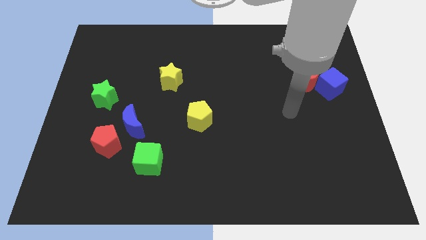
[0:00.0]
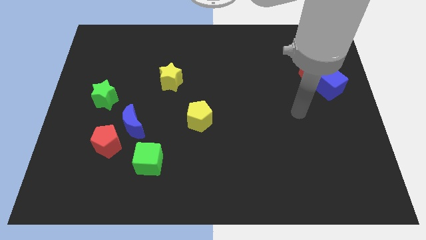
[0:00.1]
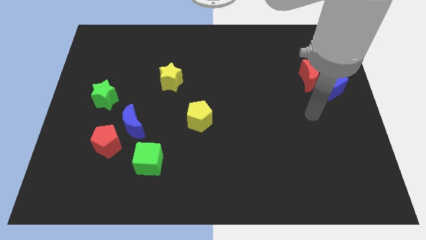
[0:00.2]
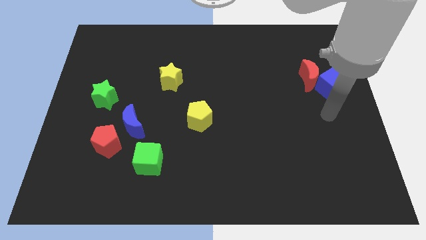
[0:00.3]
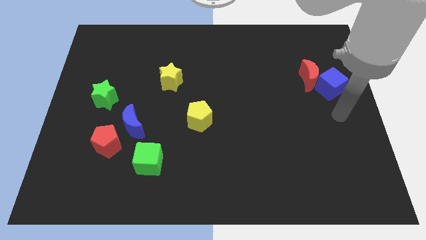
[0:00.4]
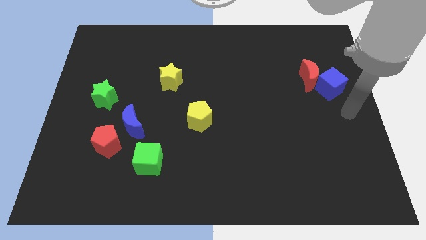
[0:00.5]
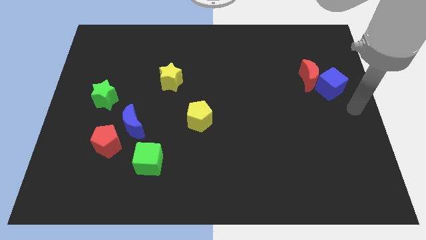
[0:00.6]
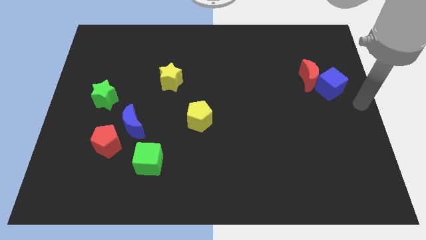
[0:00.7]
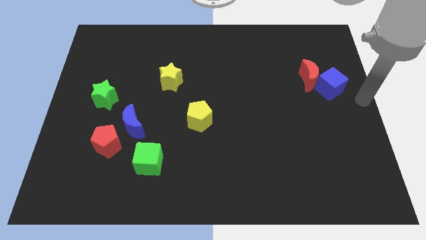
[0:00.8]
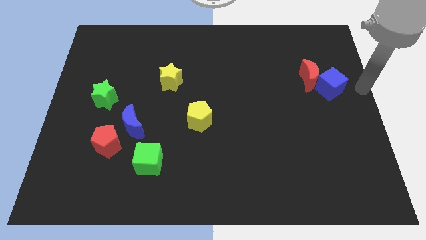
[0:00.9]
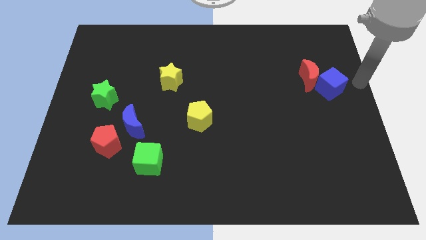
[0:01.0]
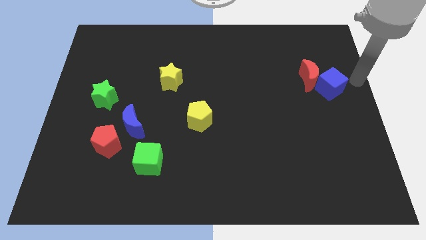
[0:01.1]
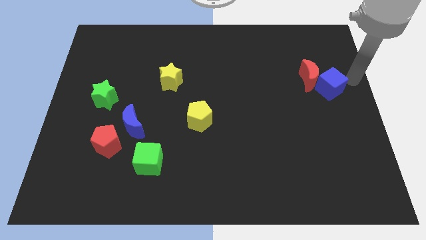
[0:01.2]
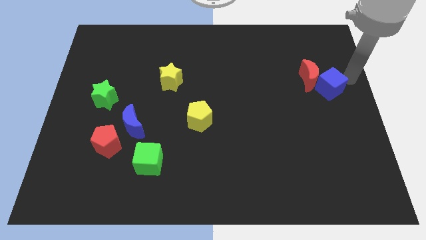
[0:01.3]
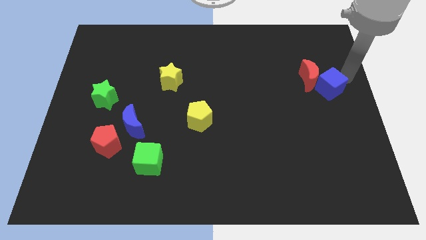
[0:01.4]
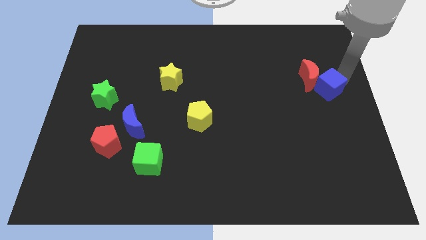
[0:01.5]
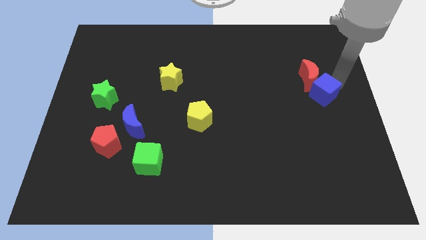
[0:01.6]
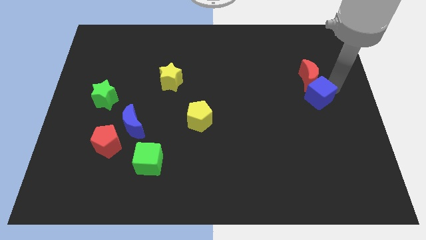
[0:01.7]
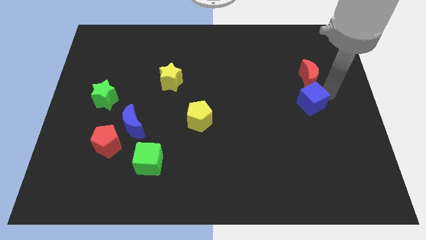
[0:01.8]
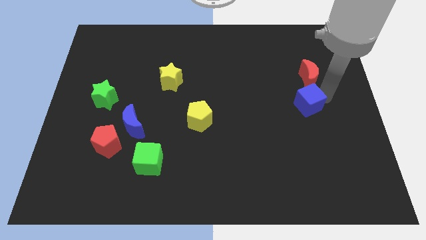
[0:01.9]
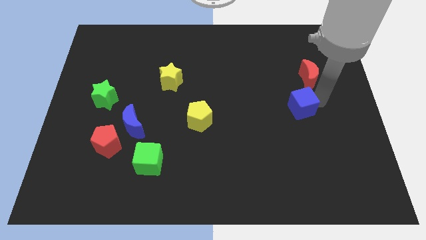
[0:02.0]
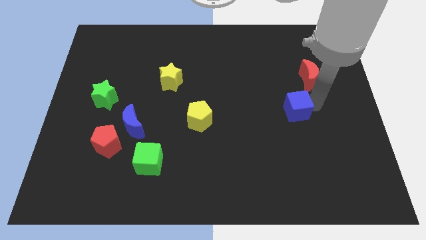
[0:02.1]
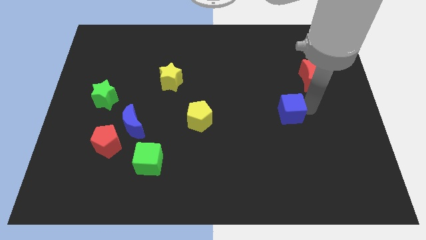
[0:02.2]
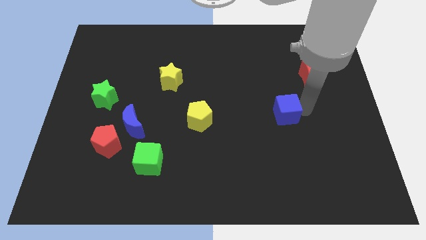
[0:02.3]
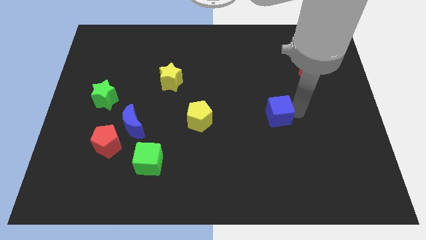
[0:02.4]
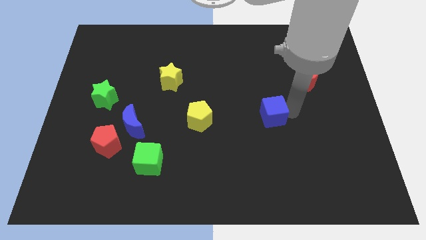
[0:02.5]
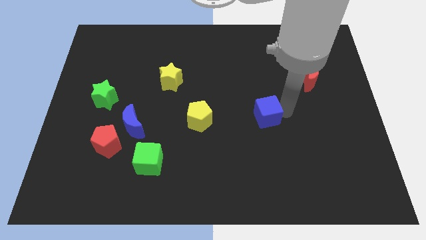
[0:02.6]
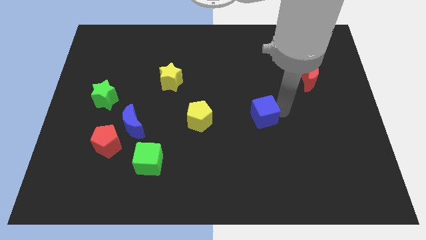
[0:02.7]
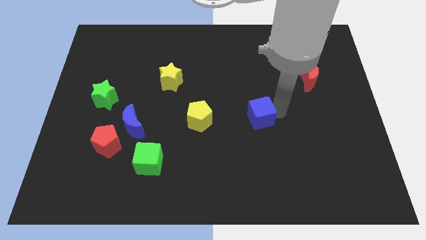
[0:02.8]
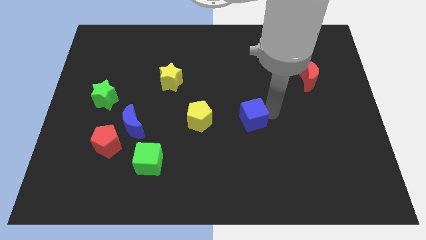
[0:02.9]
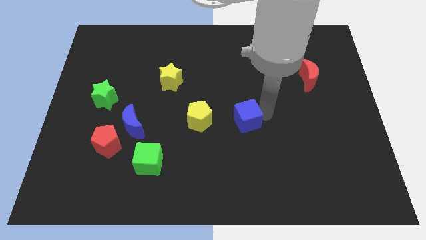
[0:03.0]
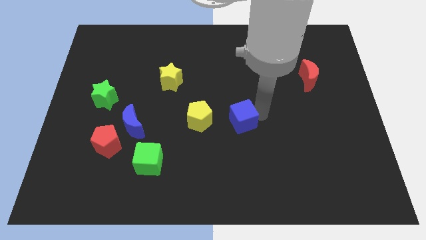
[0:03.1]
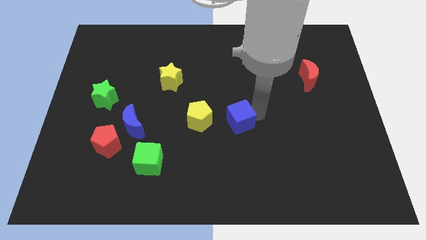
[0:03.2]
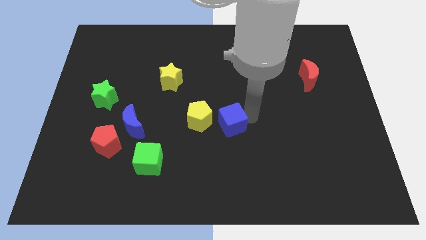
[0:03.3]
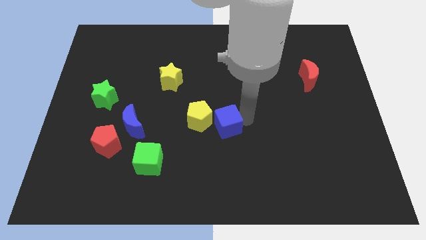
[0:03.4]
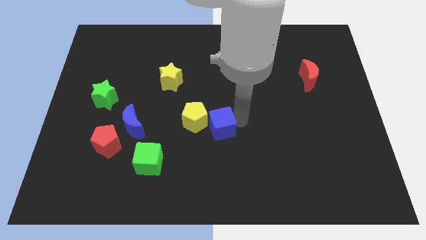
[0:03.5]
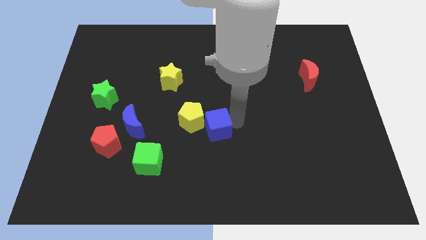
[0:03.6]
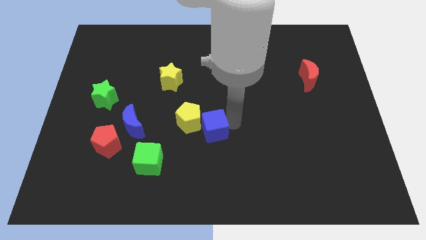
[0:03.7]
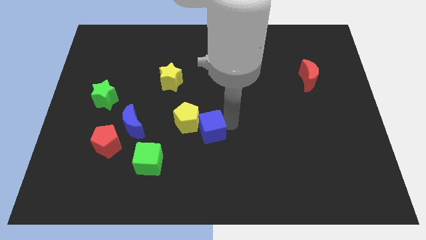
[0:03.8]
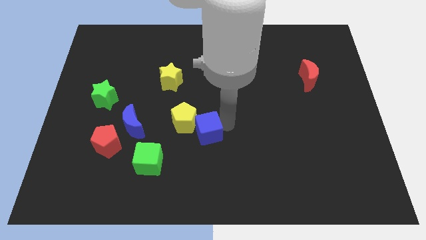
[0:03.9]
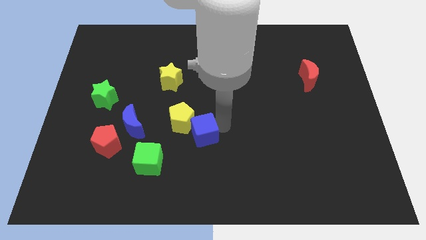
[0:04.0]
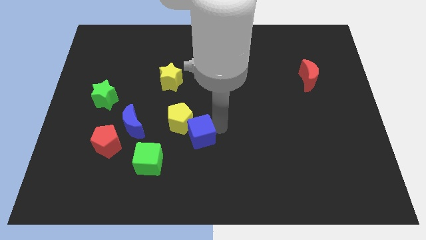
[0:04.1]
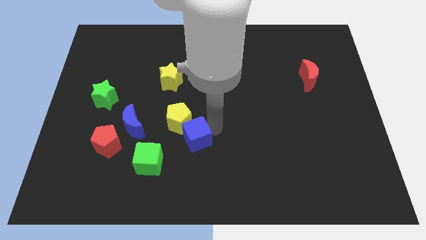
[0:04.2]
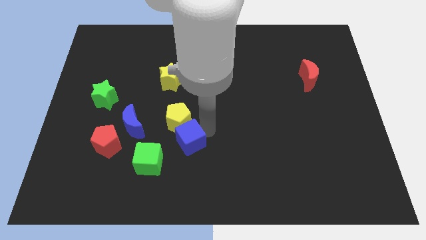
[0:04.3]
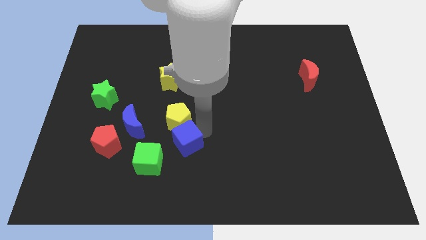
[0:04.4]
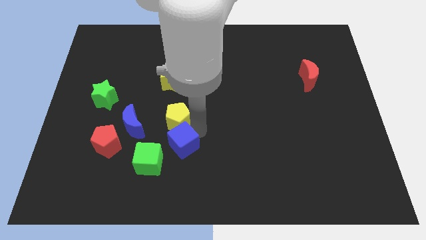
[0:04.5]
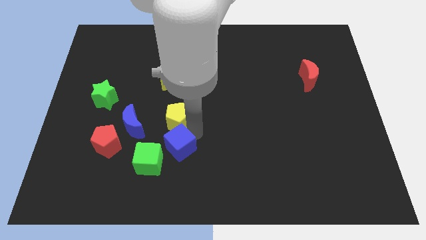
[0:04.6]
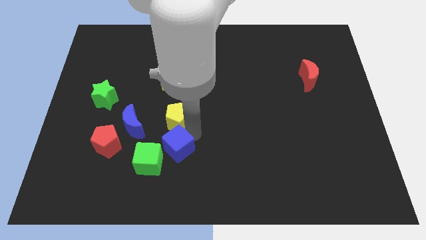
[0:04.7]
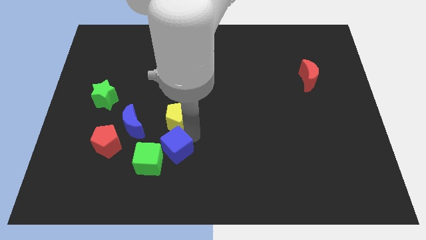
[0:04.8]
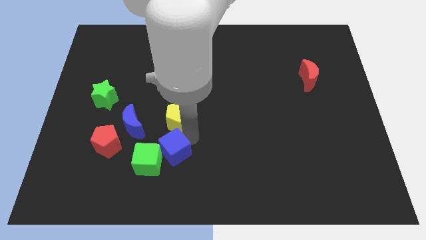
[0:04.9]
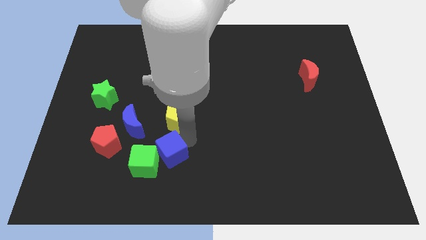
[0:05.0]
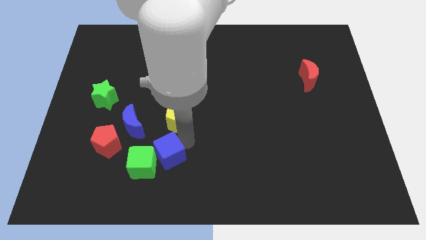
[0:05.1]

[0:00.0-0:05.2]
push the blue cube towards the green cube

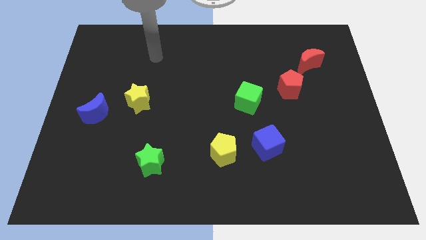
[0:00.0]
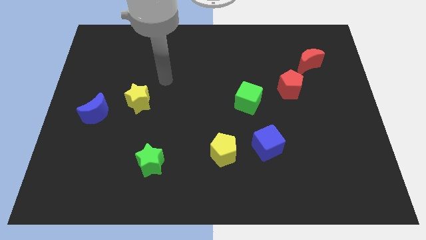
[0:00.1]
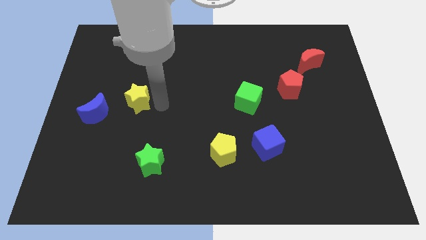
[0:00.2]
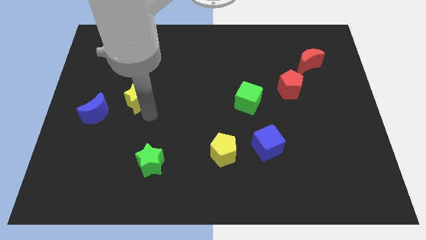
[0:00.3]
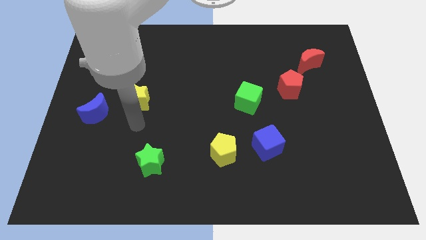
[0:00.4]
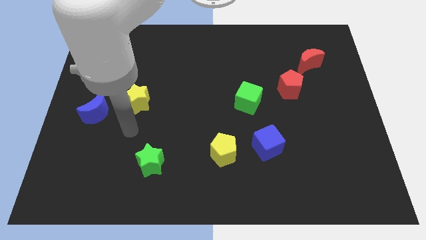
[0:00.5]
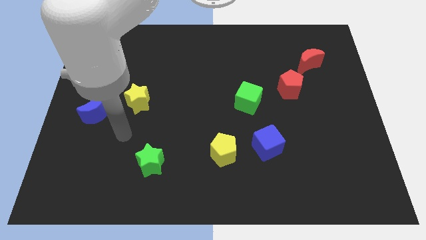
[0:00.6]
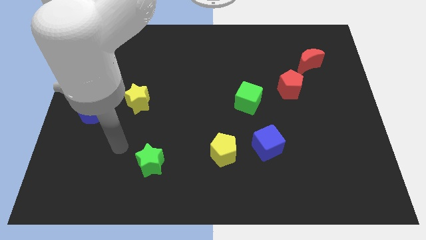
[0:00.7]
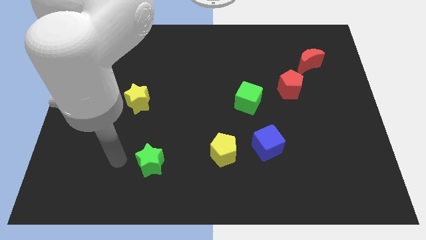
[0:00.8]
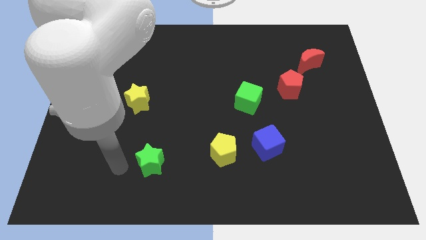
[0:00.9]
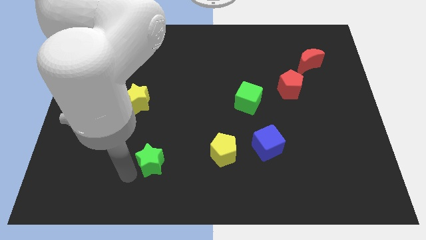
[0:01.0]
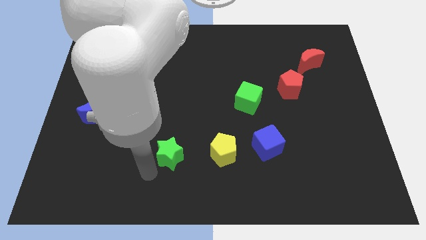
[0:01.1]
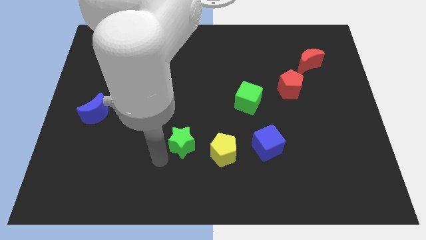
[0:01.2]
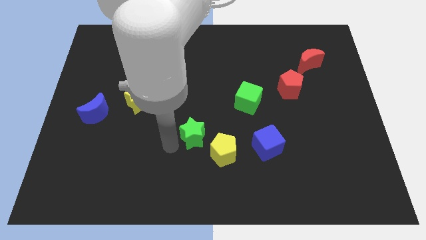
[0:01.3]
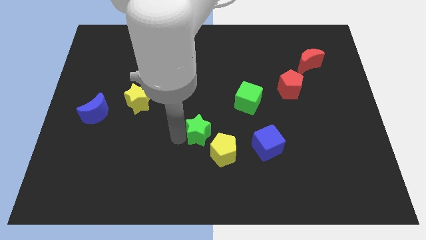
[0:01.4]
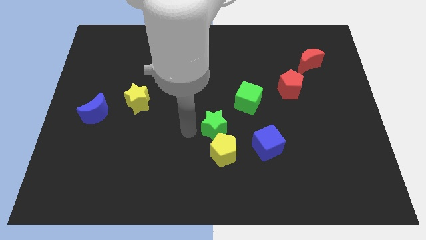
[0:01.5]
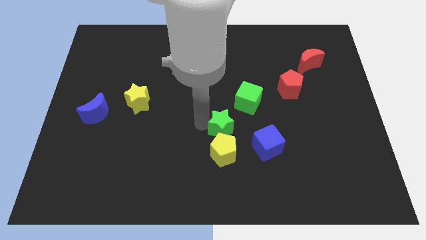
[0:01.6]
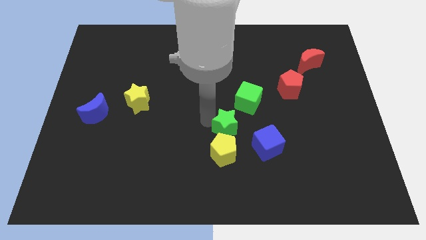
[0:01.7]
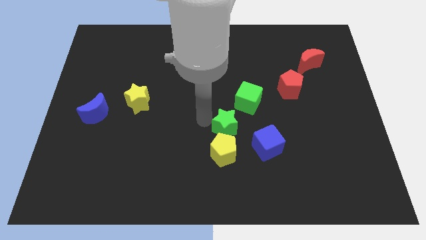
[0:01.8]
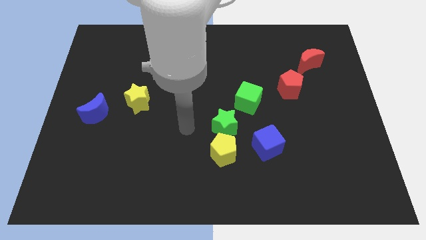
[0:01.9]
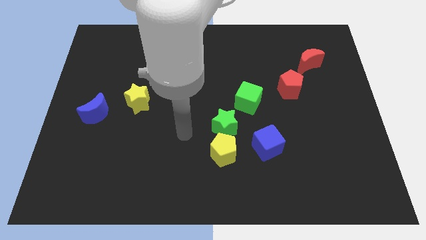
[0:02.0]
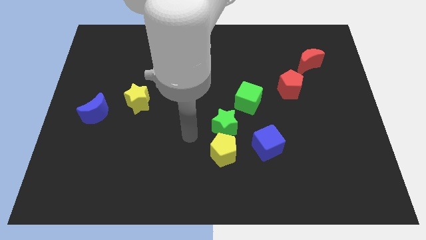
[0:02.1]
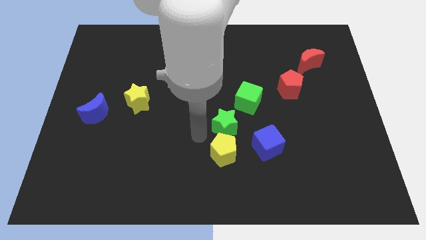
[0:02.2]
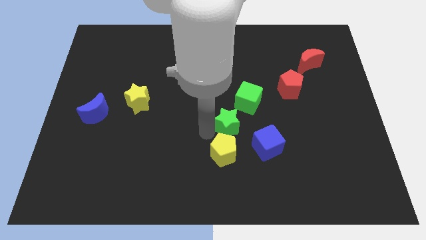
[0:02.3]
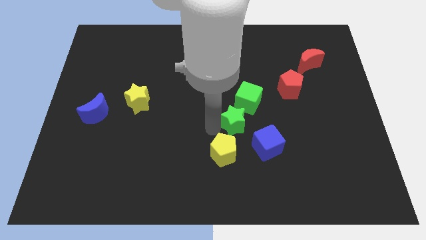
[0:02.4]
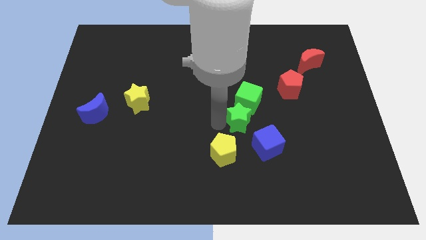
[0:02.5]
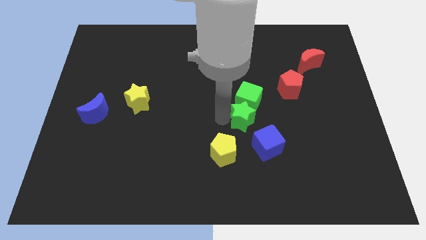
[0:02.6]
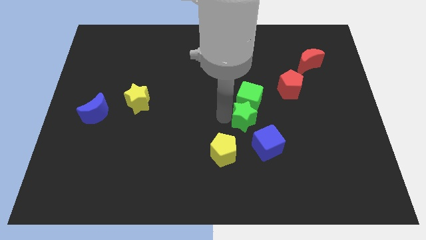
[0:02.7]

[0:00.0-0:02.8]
put the green star close to the green cube

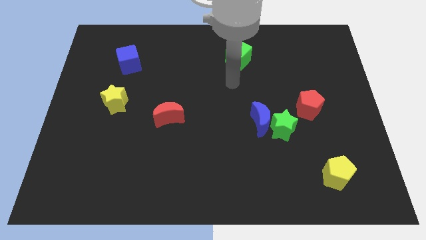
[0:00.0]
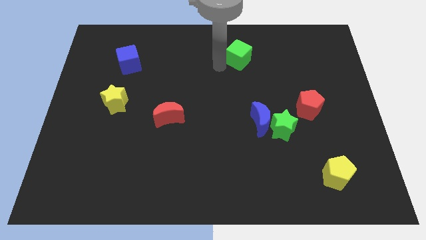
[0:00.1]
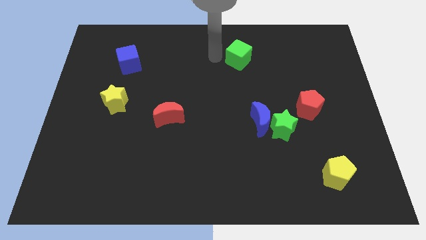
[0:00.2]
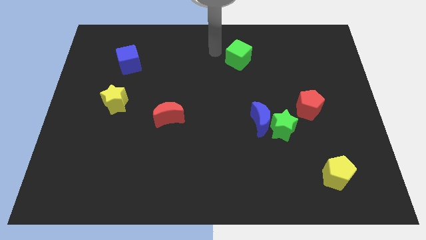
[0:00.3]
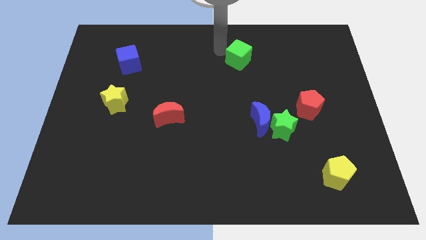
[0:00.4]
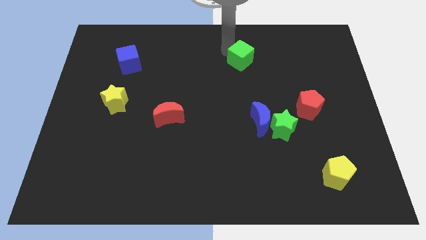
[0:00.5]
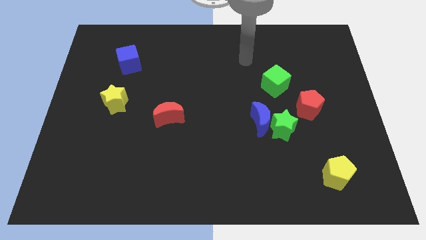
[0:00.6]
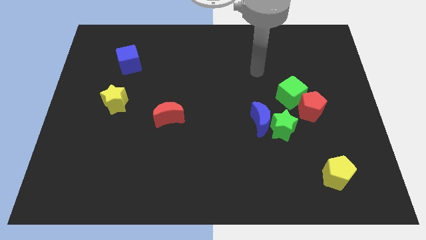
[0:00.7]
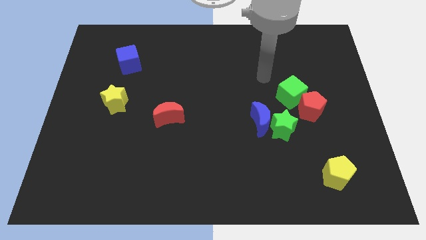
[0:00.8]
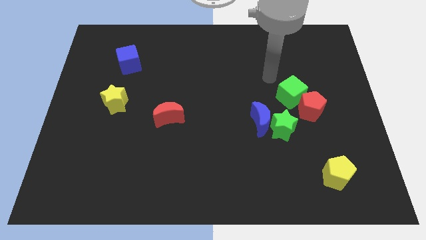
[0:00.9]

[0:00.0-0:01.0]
slide the green cube to the red pentagon
